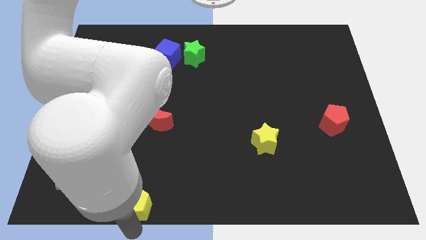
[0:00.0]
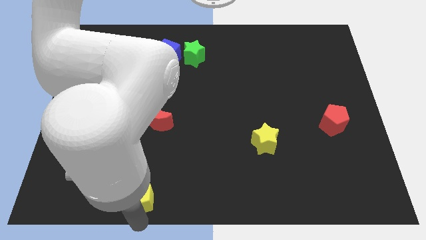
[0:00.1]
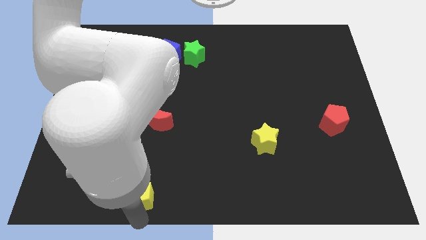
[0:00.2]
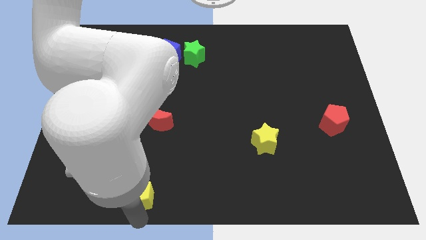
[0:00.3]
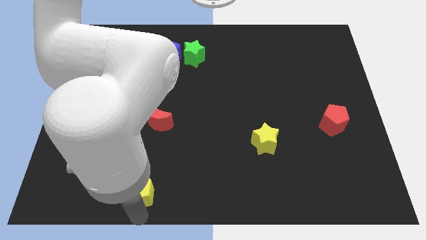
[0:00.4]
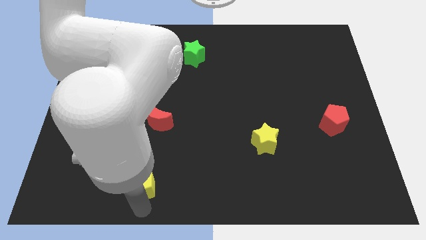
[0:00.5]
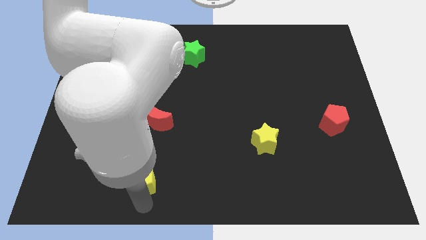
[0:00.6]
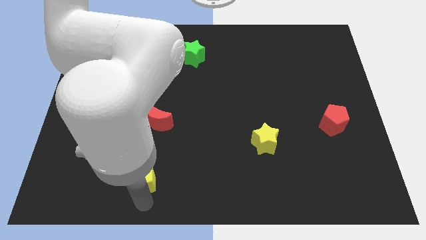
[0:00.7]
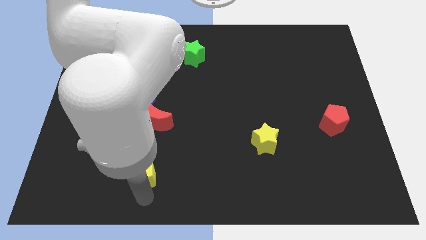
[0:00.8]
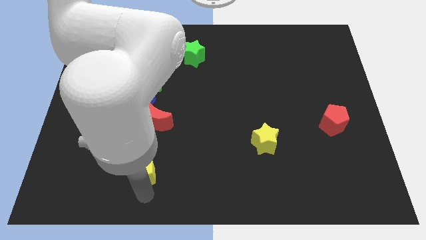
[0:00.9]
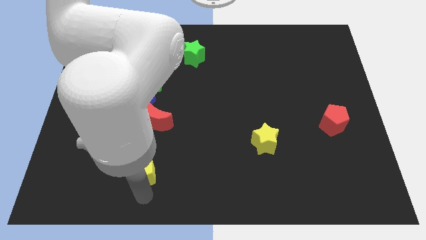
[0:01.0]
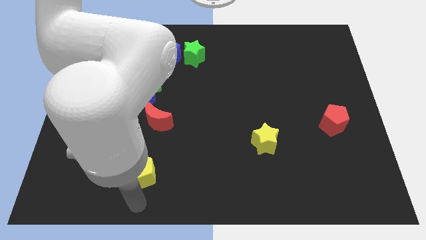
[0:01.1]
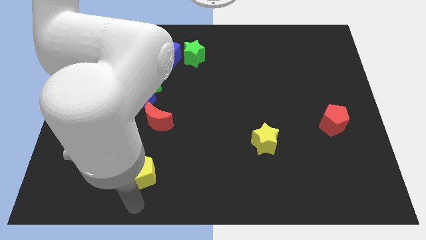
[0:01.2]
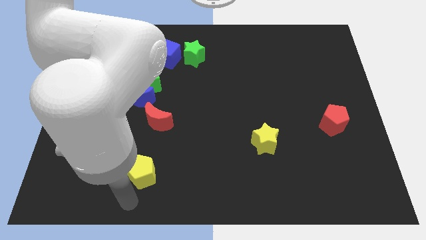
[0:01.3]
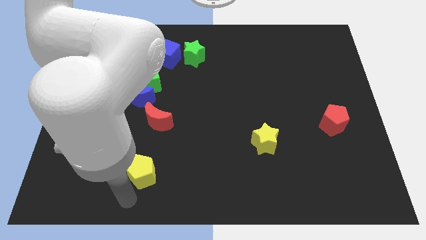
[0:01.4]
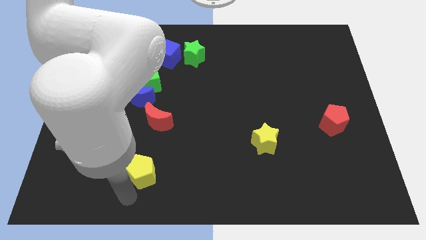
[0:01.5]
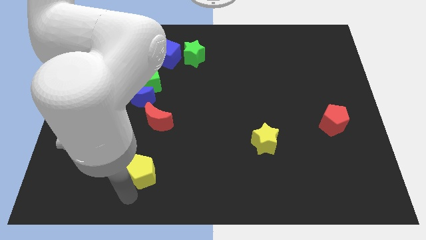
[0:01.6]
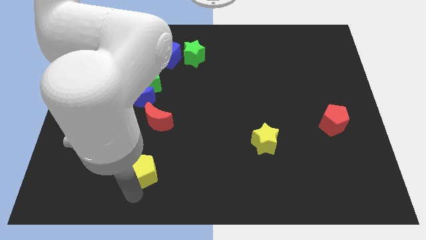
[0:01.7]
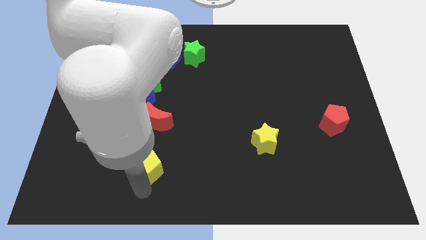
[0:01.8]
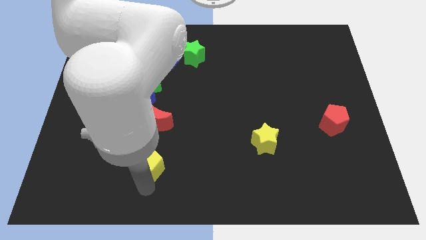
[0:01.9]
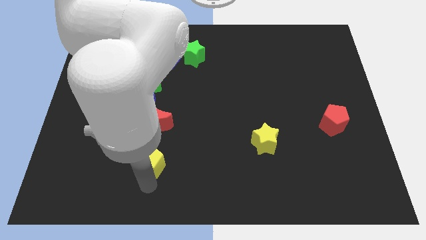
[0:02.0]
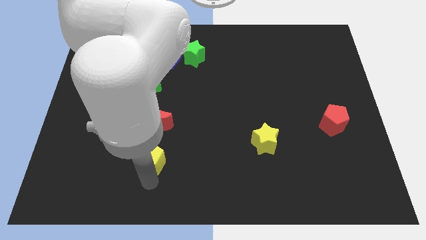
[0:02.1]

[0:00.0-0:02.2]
place the yellow pentagon below the red moon

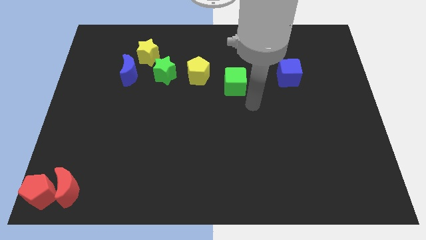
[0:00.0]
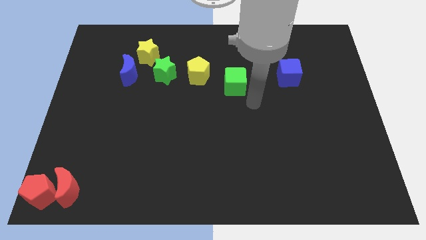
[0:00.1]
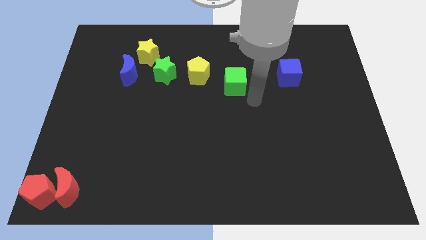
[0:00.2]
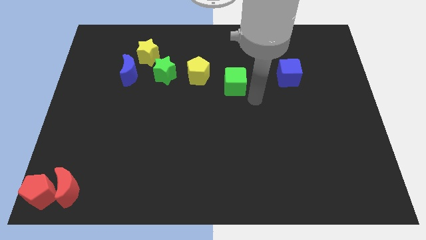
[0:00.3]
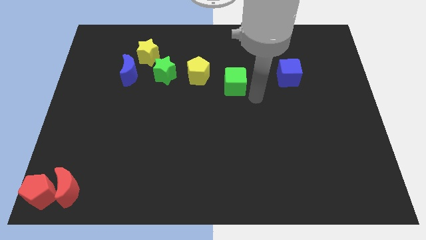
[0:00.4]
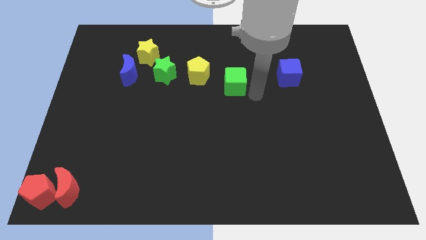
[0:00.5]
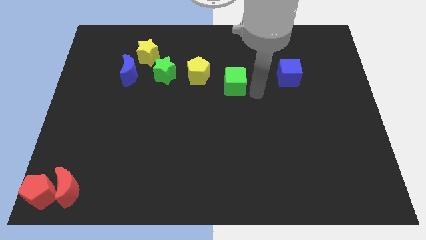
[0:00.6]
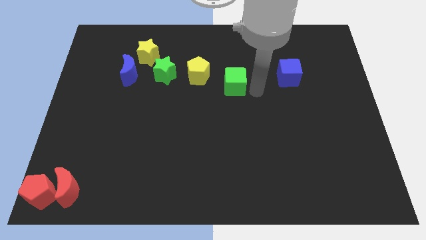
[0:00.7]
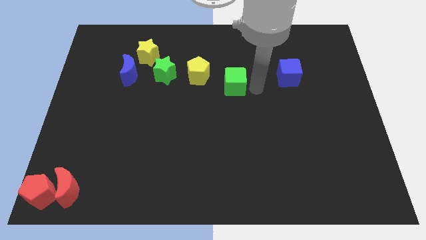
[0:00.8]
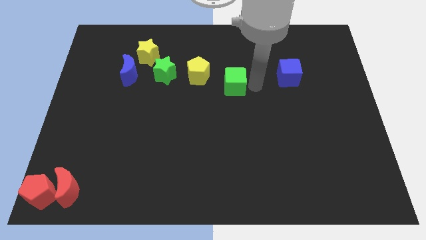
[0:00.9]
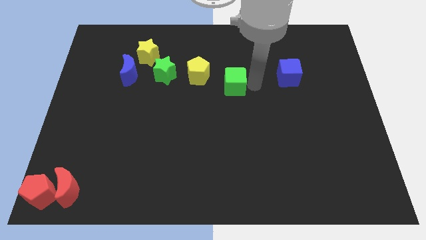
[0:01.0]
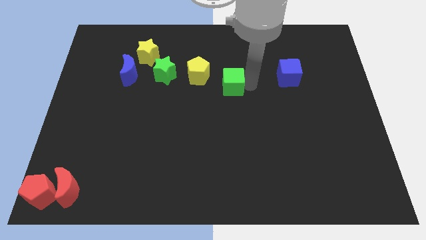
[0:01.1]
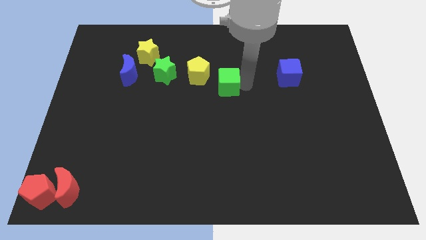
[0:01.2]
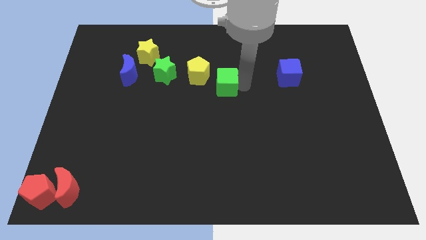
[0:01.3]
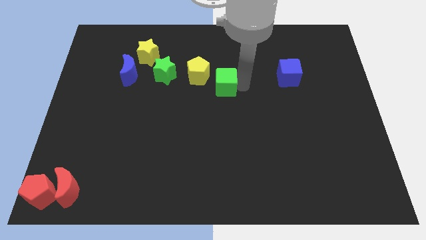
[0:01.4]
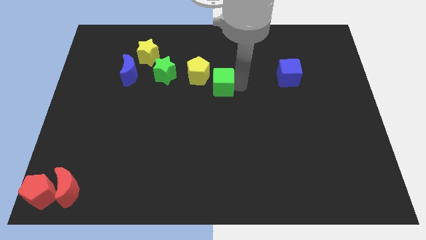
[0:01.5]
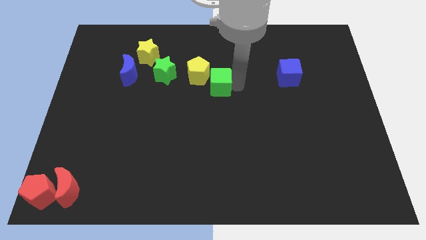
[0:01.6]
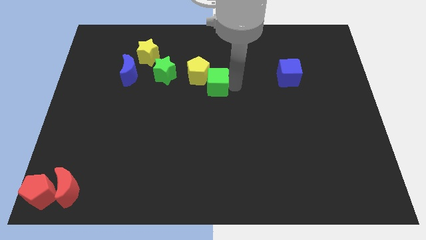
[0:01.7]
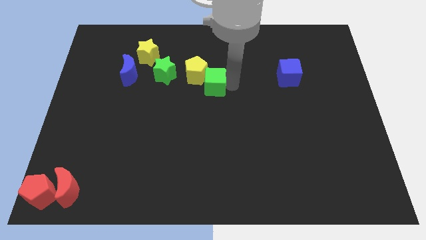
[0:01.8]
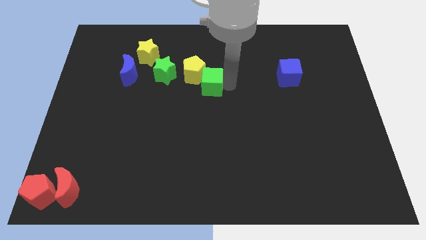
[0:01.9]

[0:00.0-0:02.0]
make the green cube touch the bottom right side of the yellow pentagon

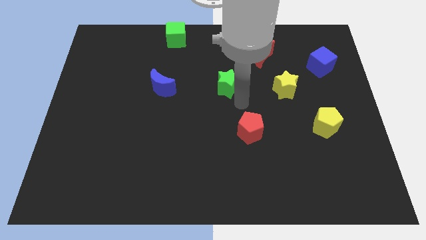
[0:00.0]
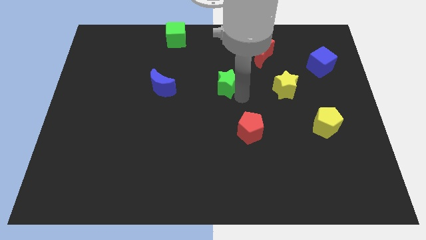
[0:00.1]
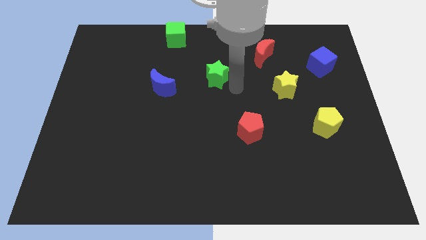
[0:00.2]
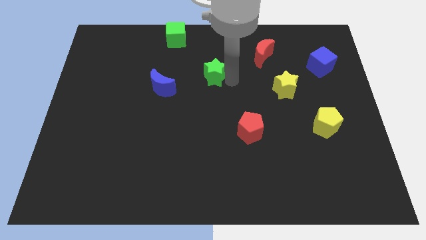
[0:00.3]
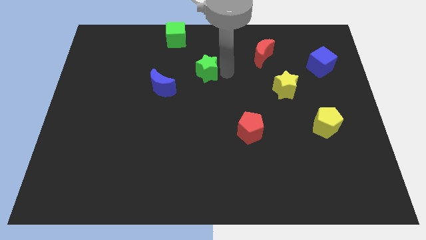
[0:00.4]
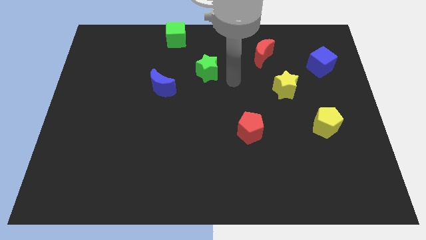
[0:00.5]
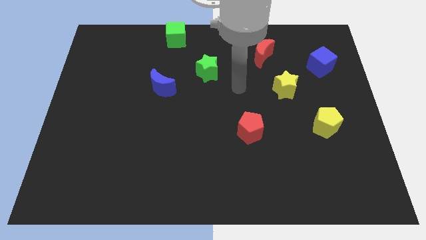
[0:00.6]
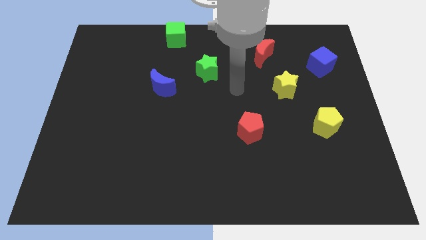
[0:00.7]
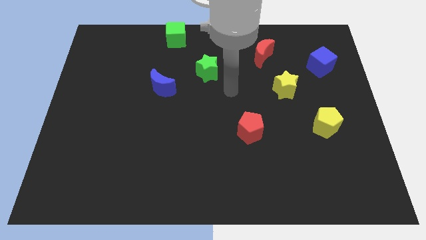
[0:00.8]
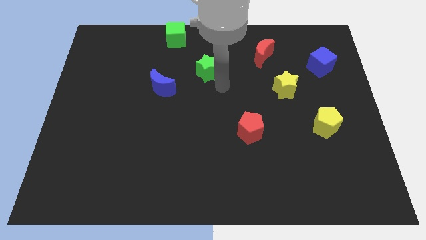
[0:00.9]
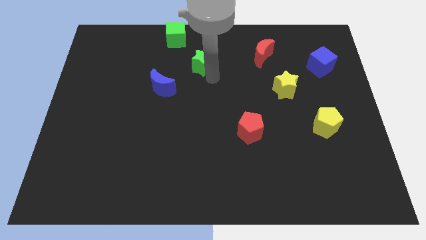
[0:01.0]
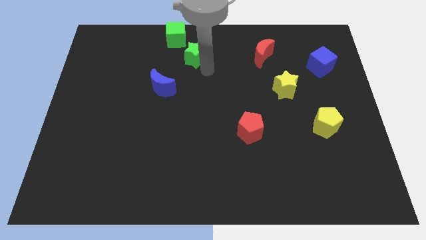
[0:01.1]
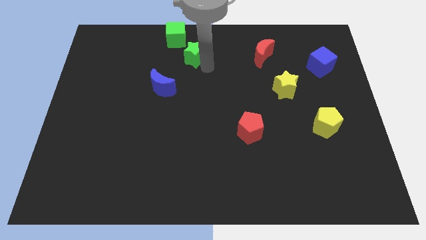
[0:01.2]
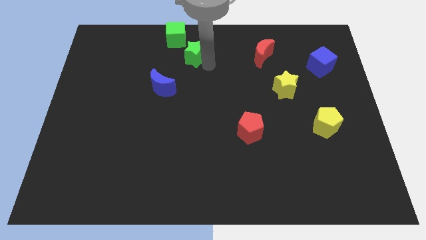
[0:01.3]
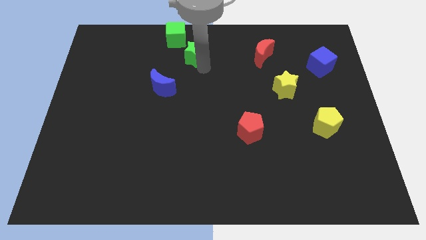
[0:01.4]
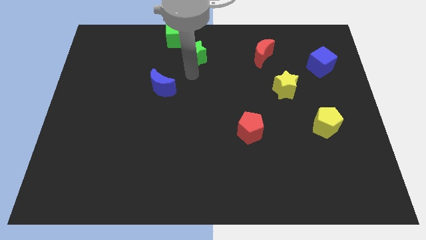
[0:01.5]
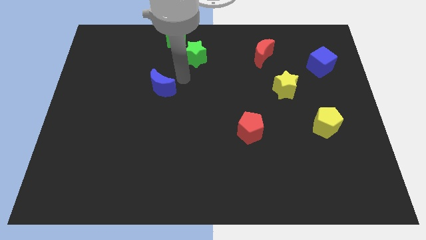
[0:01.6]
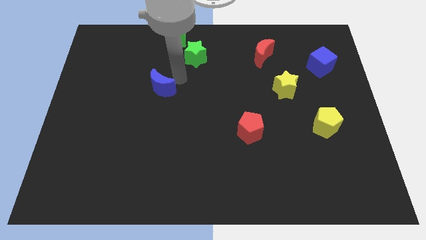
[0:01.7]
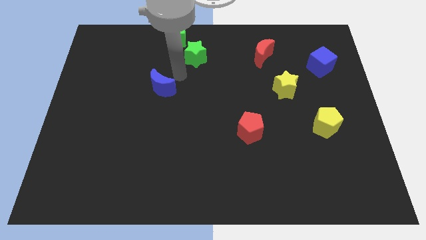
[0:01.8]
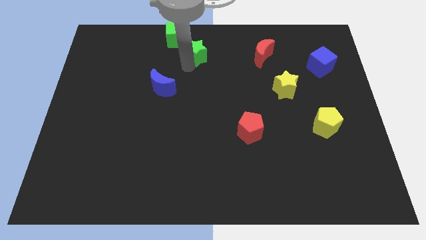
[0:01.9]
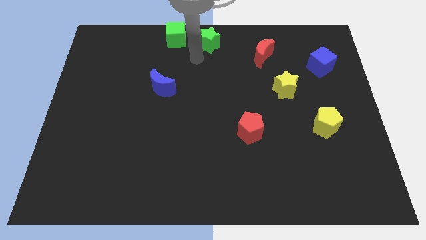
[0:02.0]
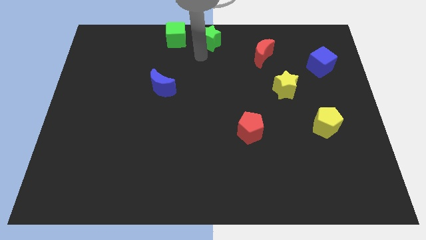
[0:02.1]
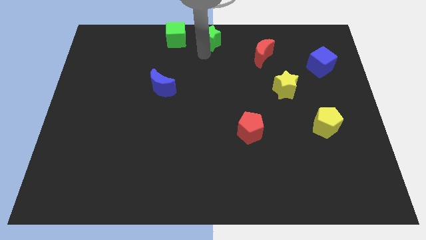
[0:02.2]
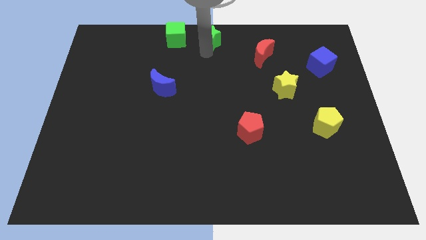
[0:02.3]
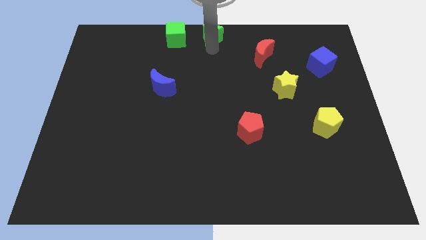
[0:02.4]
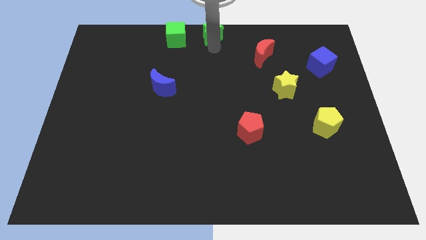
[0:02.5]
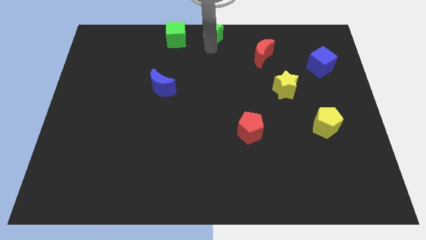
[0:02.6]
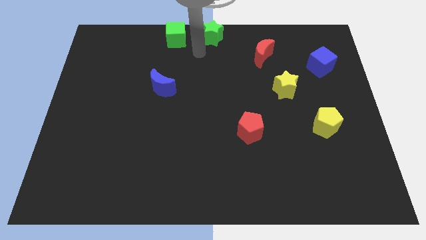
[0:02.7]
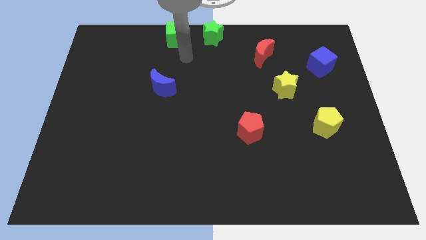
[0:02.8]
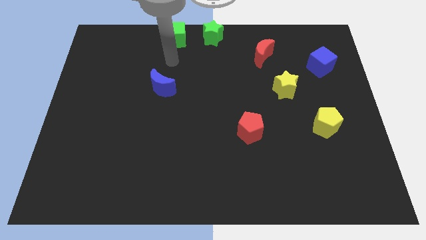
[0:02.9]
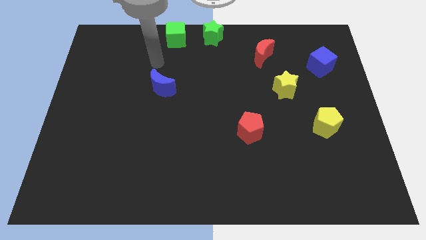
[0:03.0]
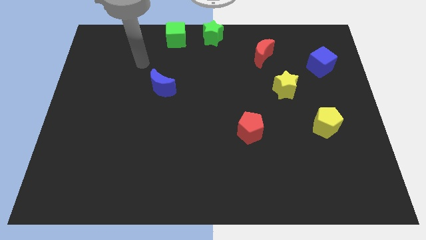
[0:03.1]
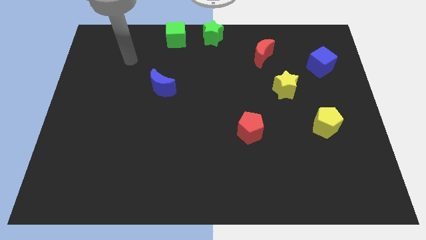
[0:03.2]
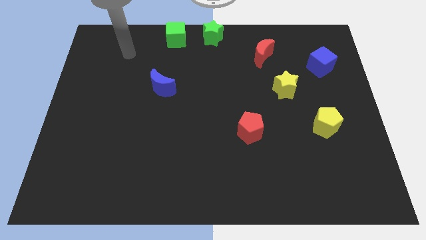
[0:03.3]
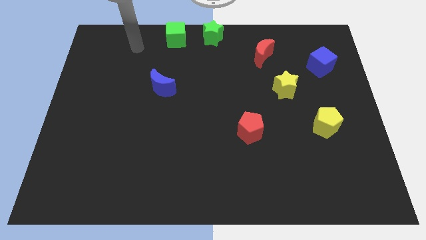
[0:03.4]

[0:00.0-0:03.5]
push the green star parallel to green cube

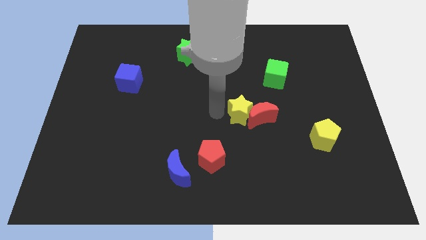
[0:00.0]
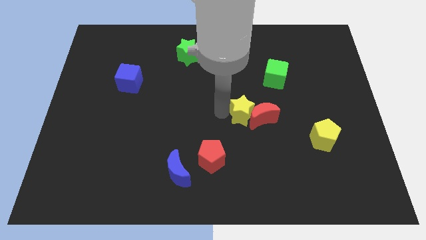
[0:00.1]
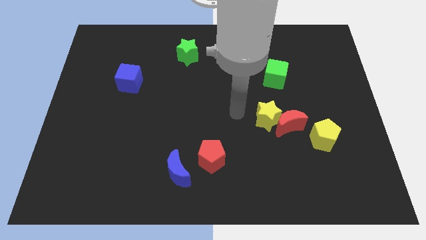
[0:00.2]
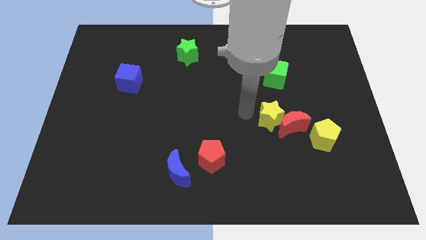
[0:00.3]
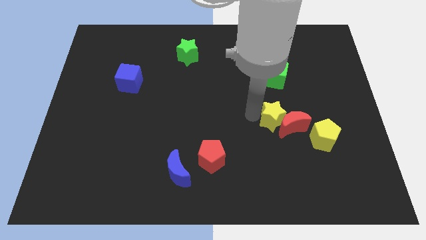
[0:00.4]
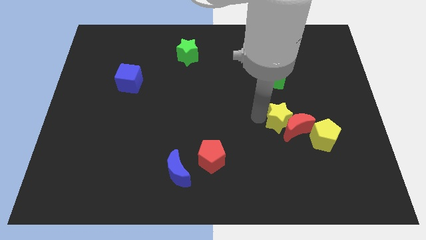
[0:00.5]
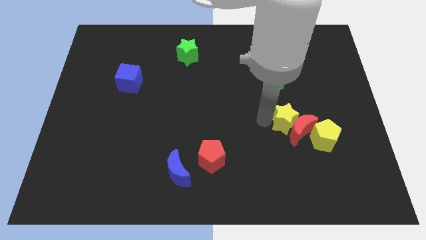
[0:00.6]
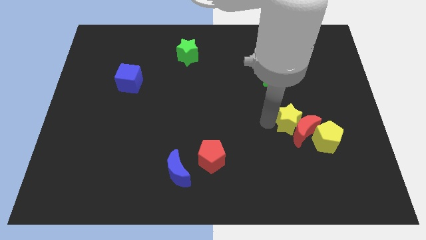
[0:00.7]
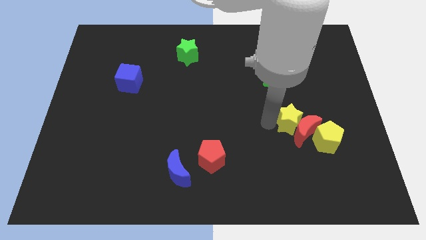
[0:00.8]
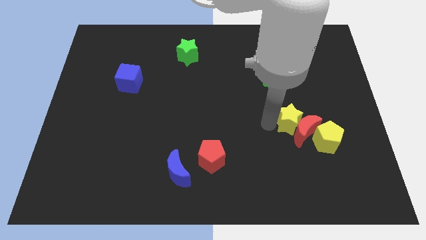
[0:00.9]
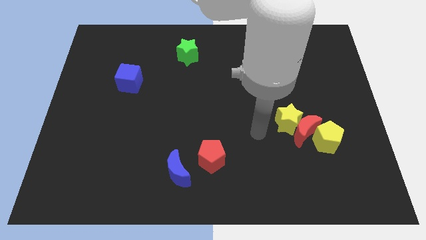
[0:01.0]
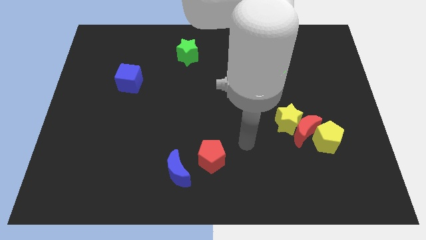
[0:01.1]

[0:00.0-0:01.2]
push the yellow star and red crescent into the yellow pentagon

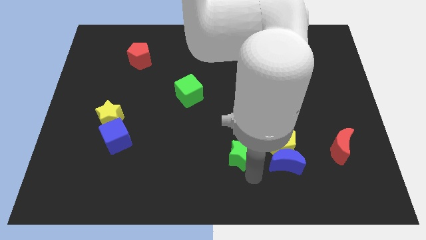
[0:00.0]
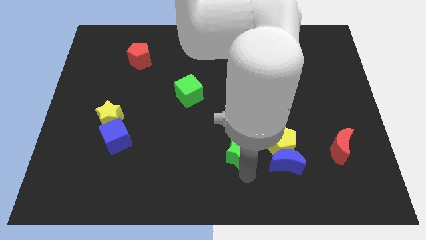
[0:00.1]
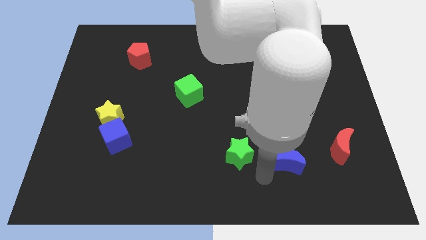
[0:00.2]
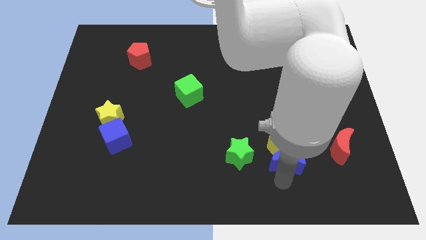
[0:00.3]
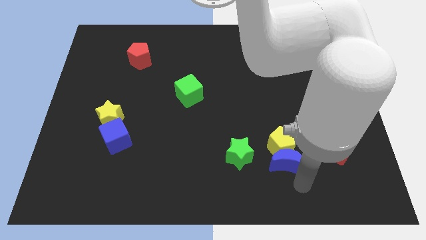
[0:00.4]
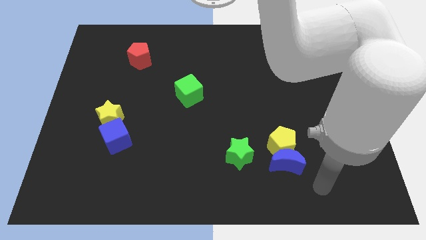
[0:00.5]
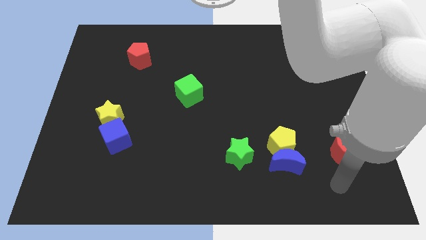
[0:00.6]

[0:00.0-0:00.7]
move the green star away from the yellow pentagon
